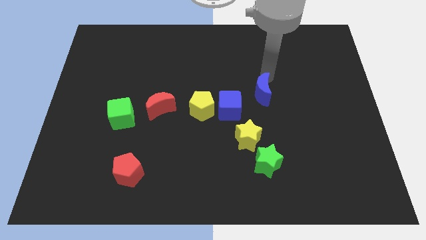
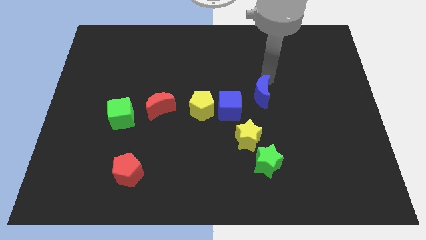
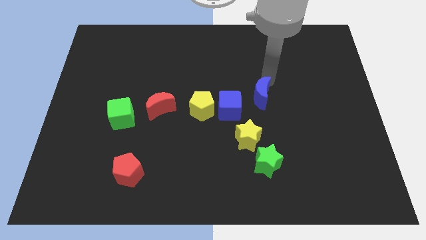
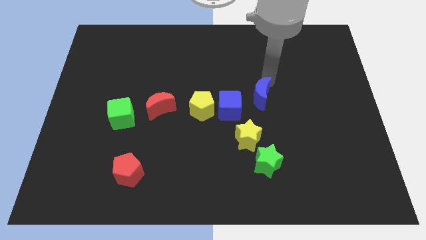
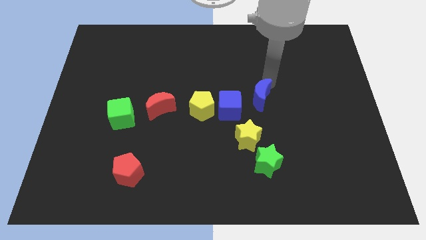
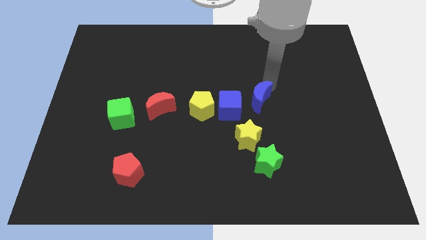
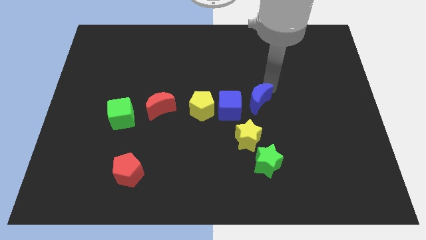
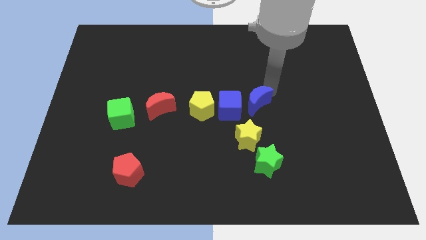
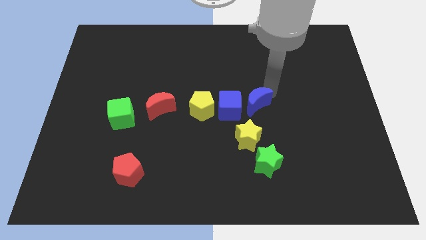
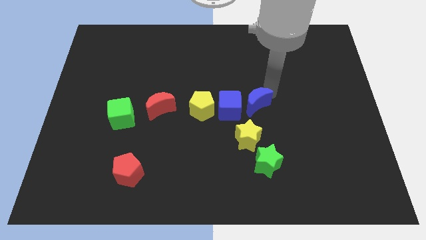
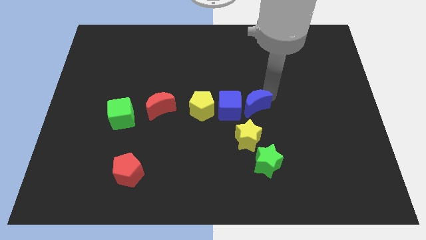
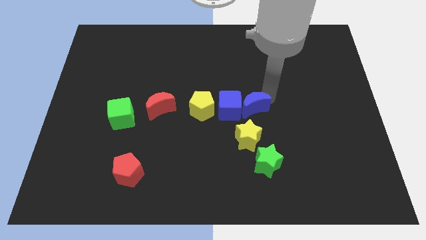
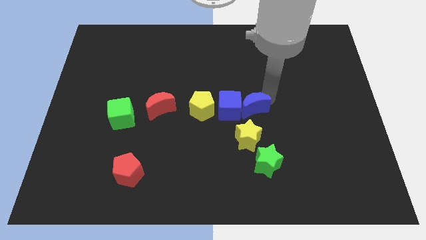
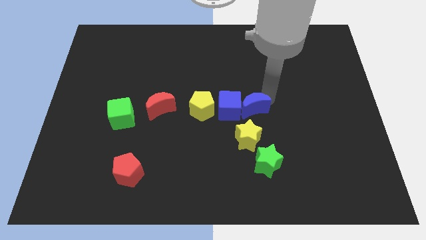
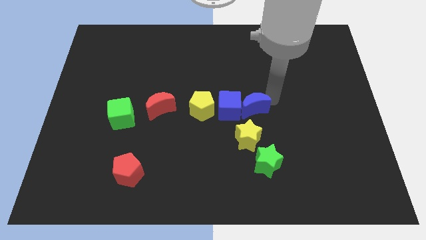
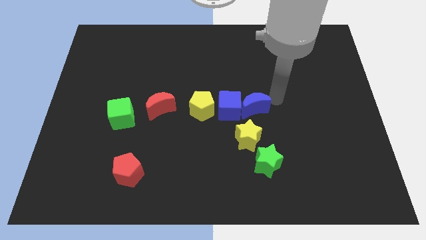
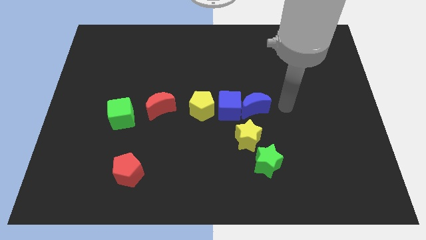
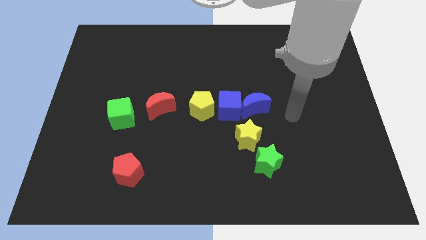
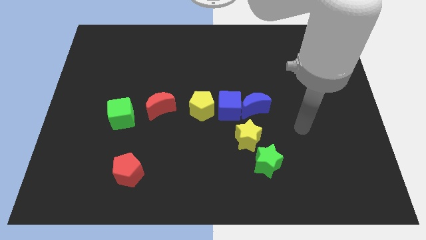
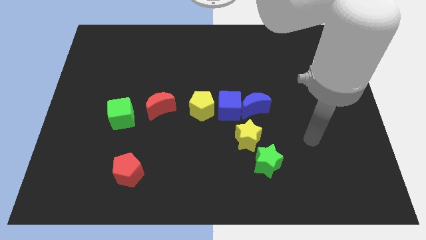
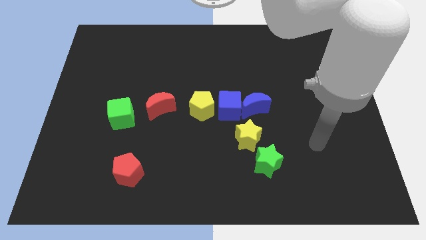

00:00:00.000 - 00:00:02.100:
place the blue moon next to the blue cube

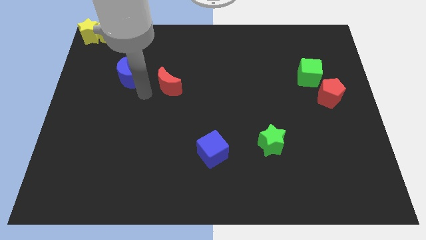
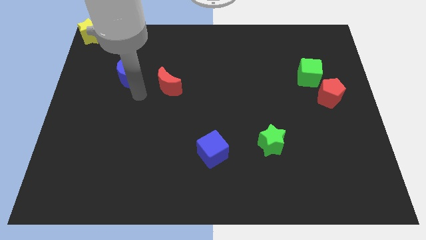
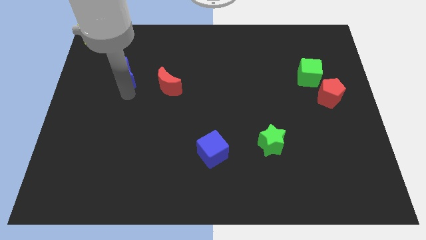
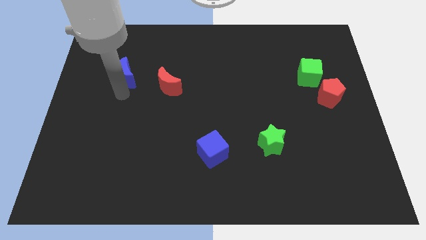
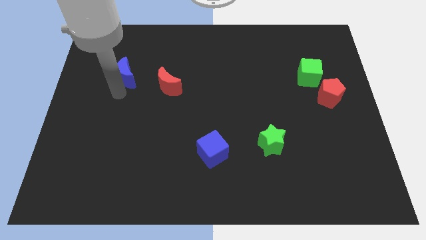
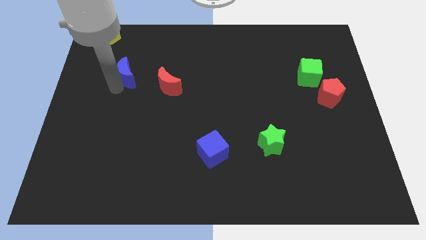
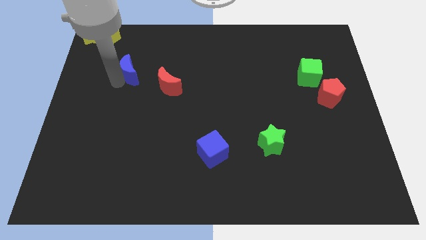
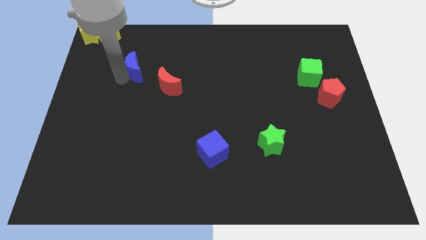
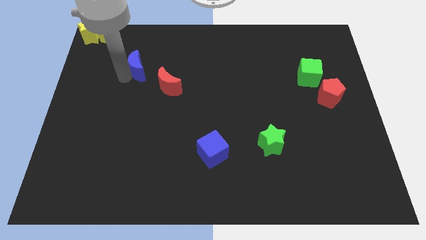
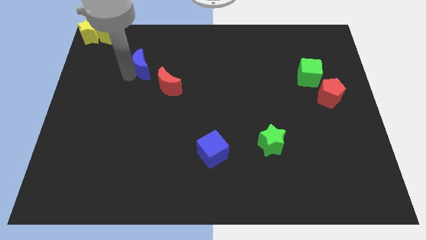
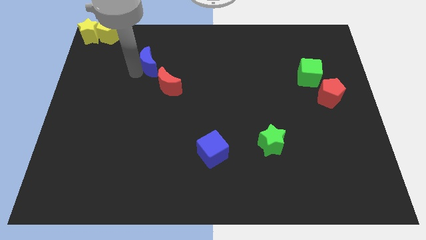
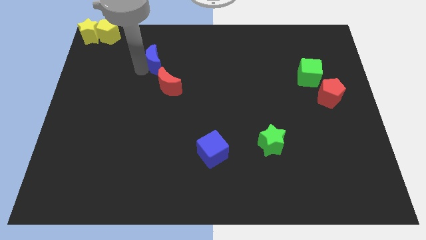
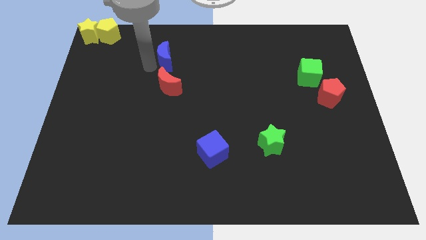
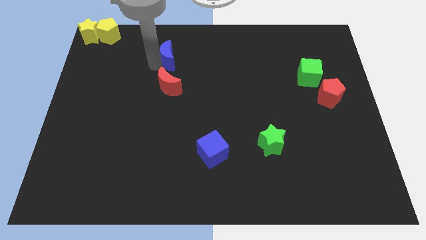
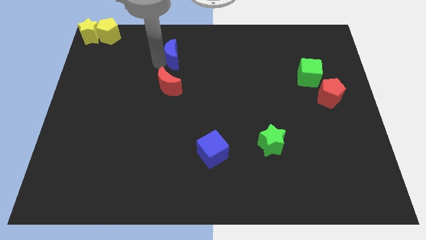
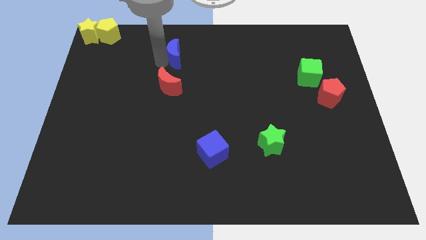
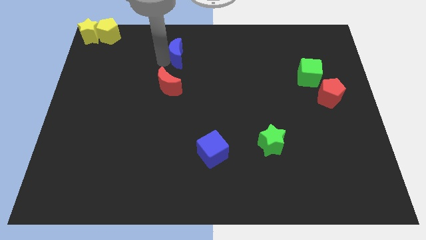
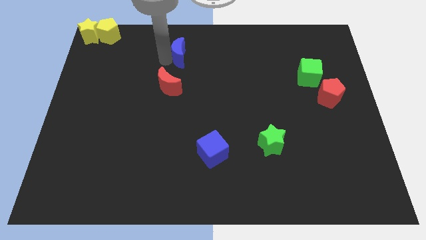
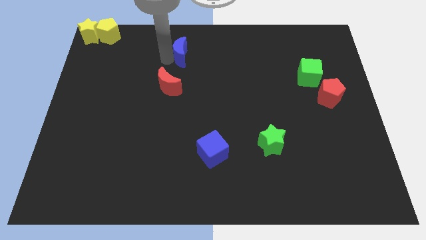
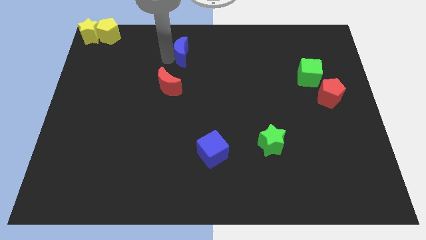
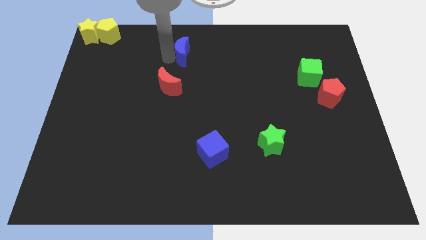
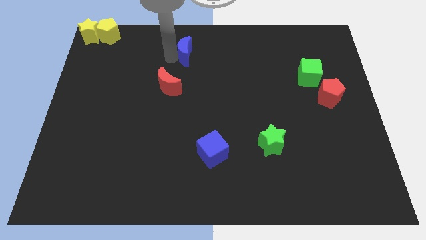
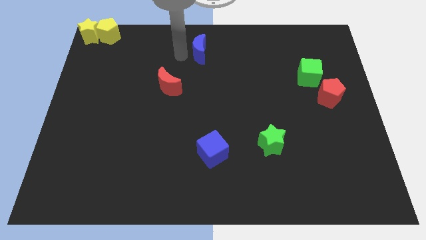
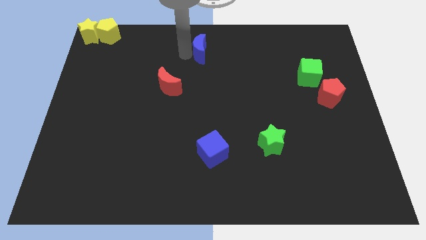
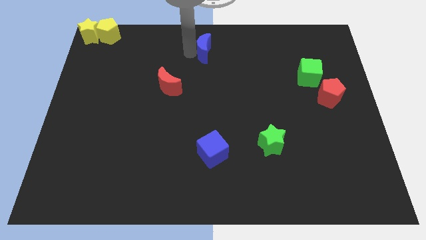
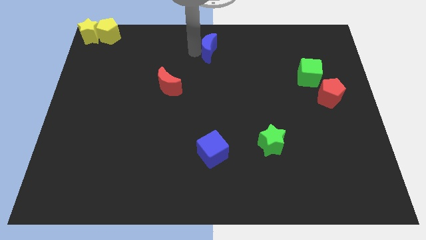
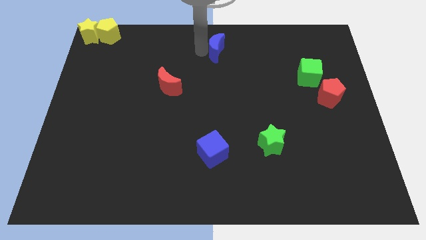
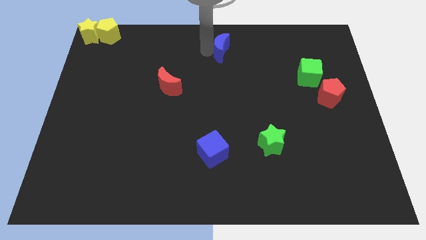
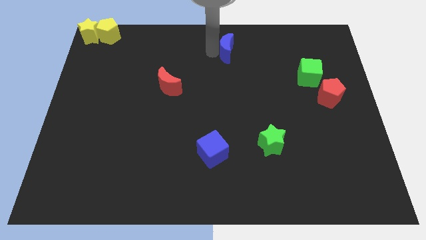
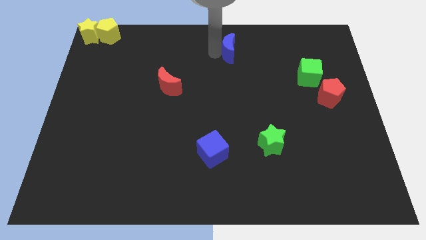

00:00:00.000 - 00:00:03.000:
move the blue crescent to the top center of the board

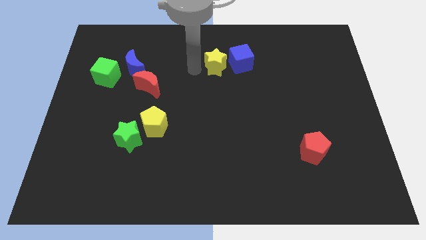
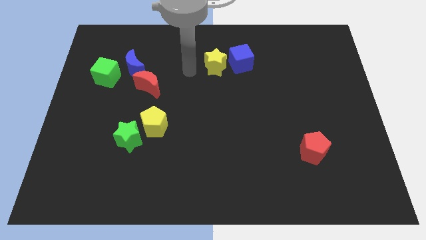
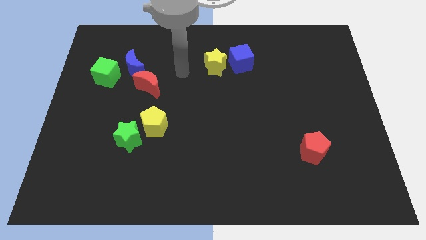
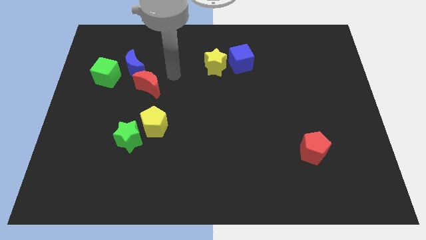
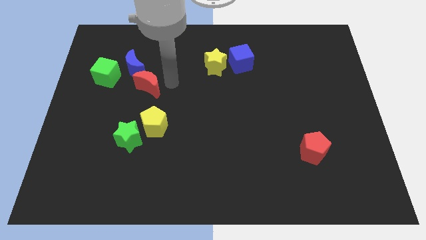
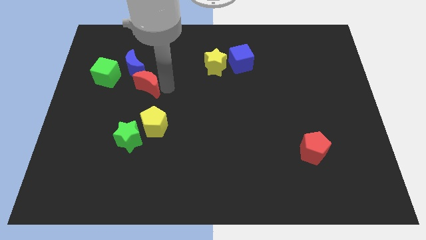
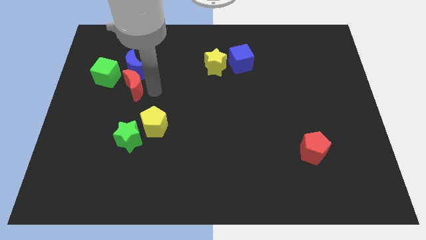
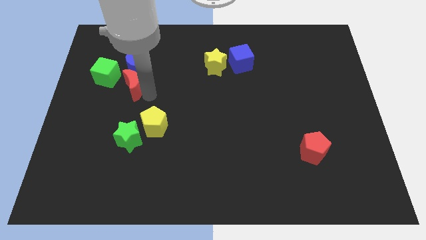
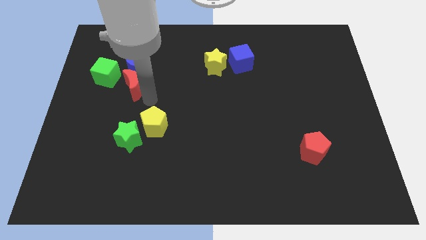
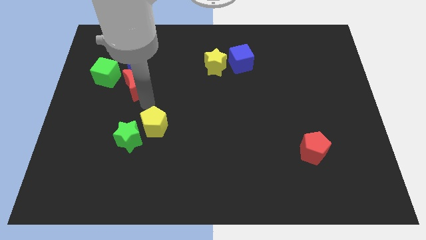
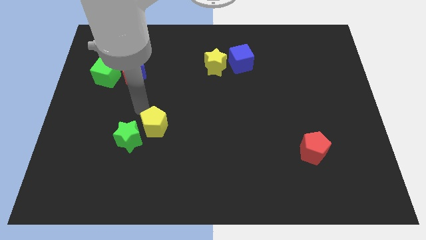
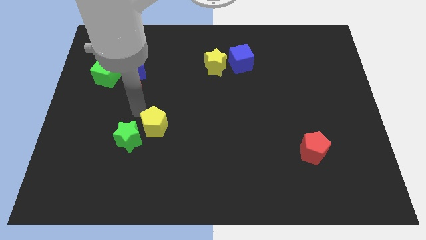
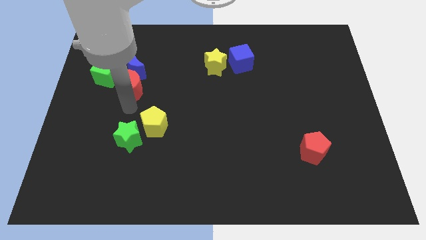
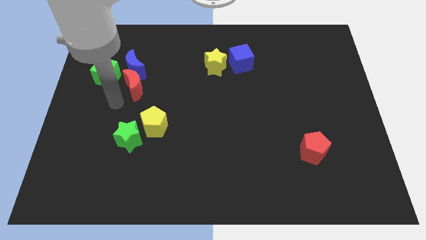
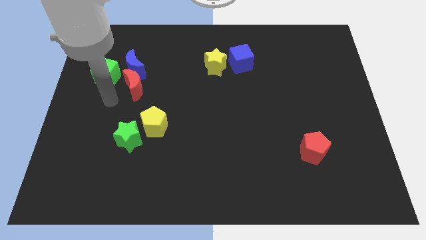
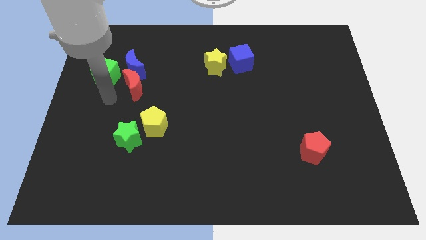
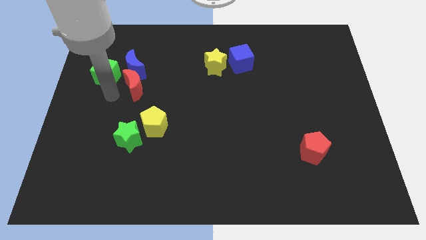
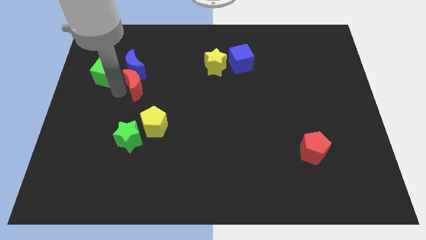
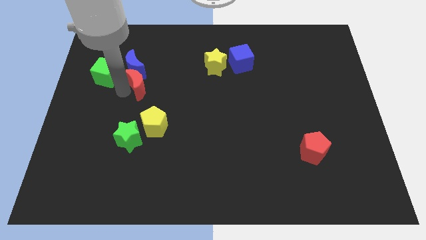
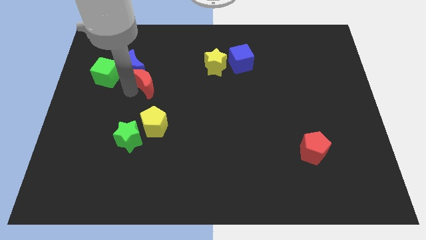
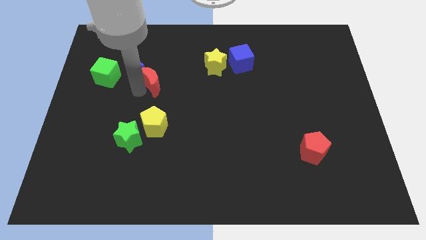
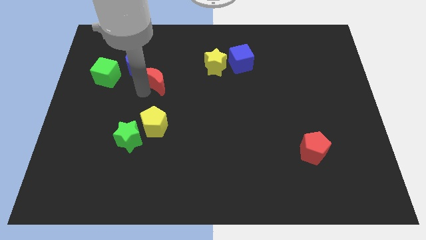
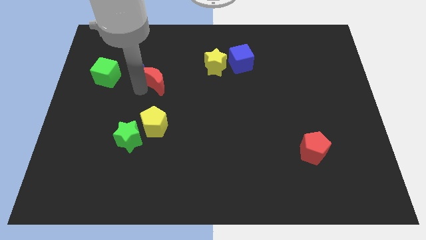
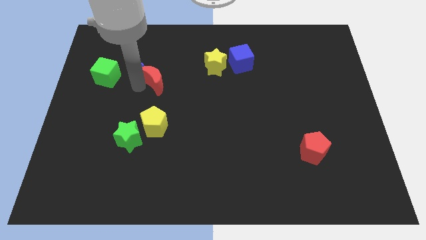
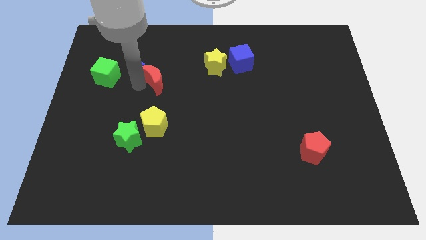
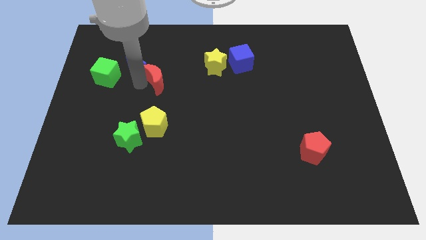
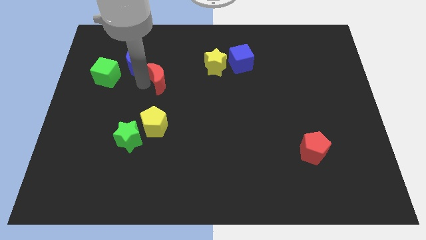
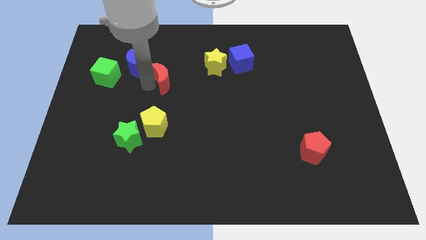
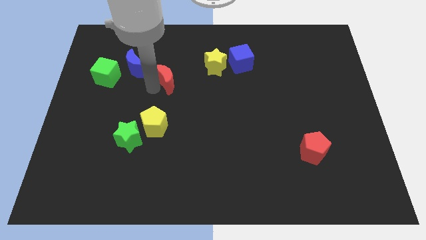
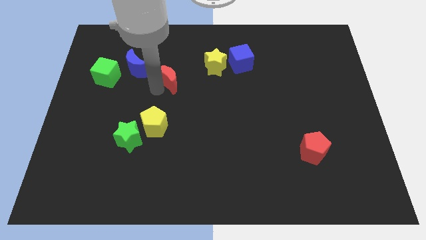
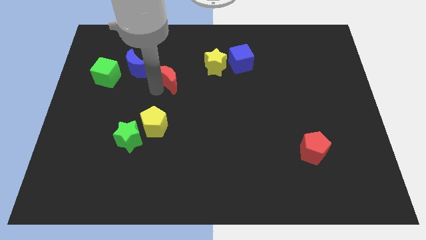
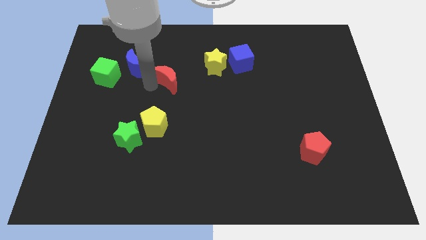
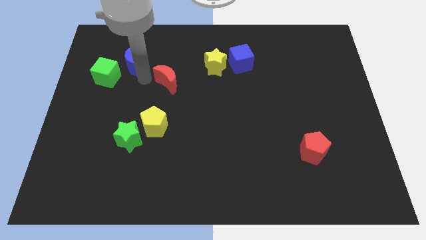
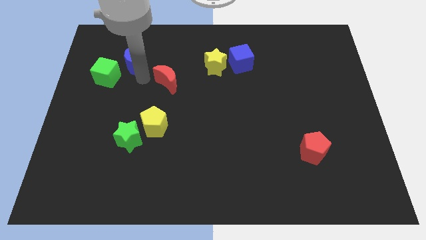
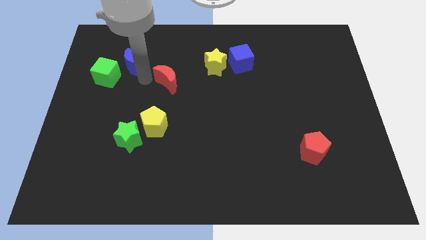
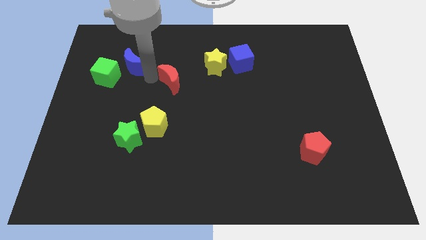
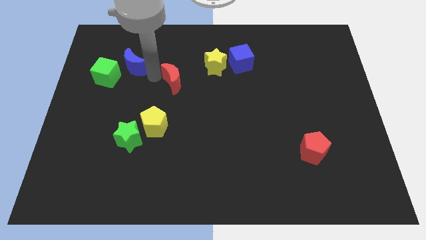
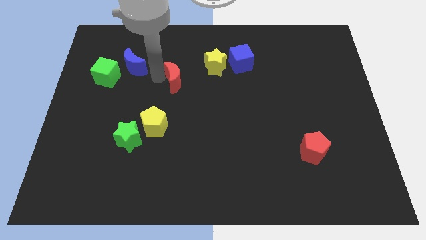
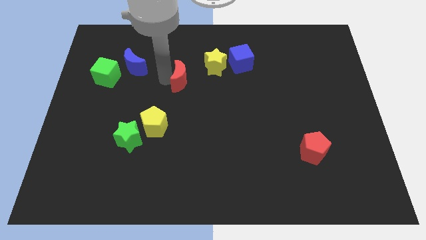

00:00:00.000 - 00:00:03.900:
push the red crescent to the top right of the yellow pentagon
